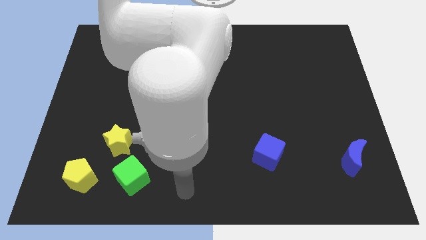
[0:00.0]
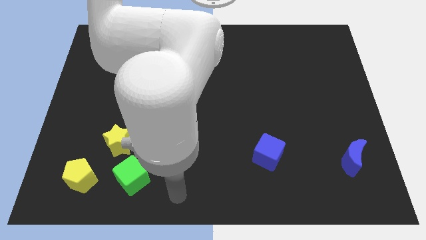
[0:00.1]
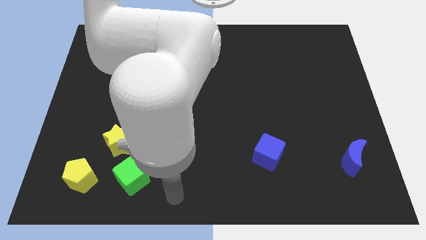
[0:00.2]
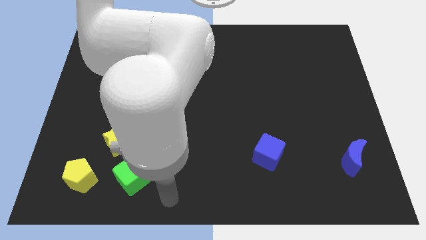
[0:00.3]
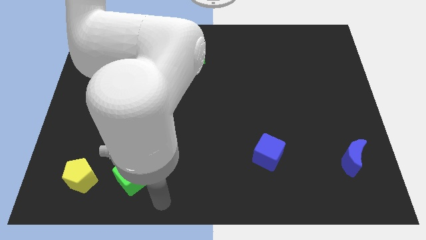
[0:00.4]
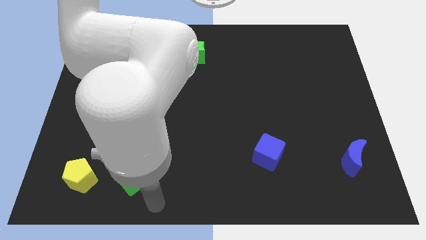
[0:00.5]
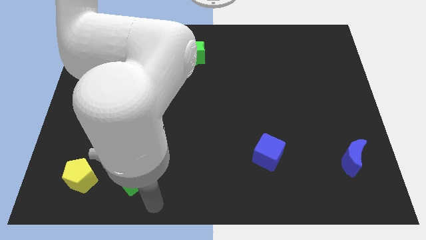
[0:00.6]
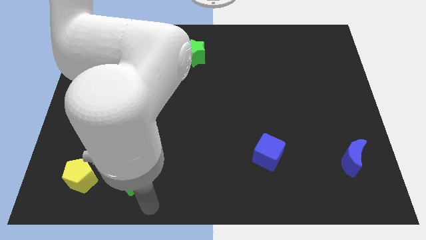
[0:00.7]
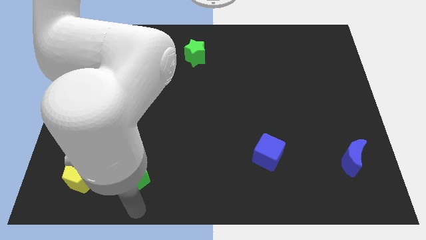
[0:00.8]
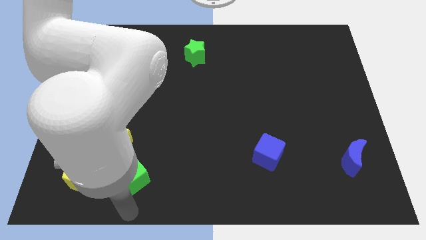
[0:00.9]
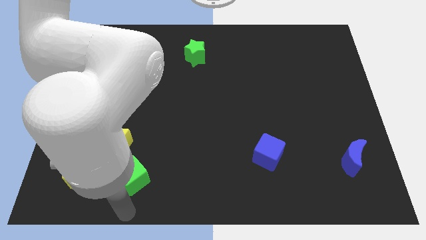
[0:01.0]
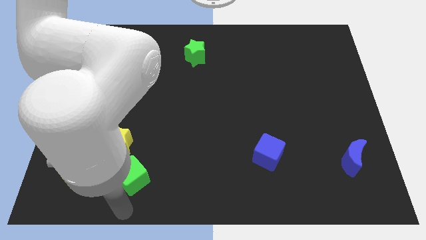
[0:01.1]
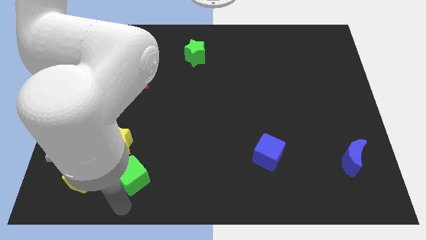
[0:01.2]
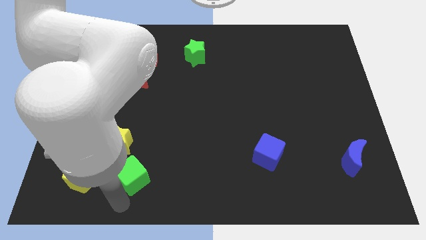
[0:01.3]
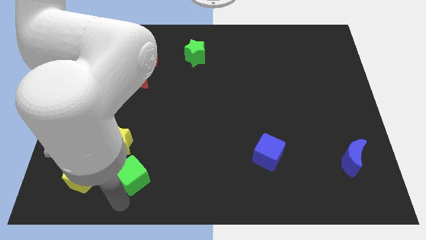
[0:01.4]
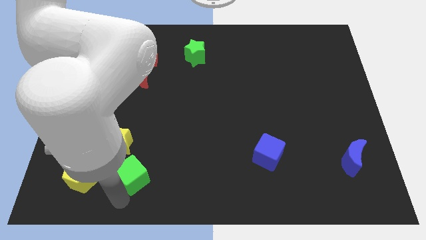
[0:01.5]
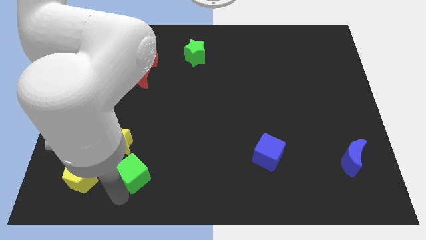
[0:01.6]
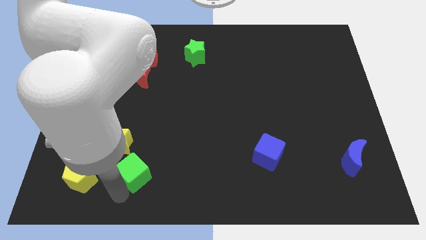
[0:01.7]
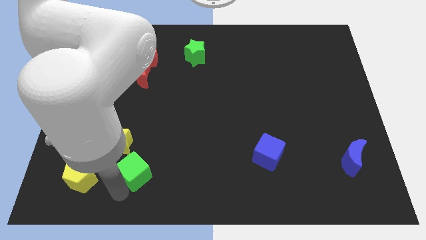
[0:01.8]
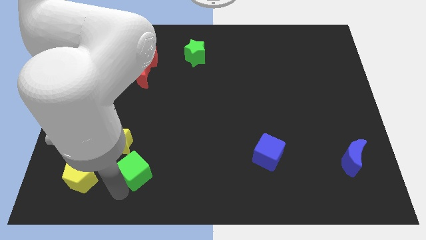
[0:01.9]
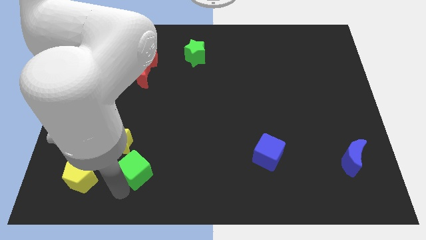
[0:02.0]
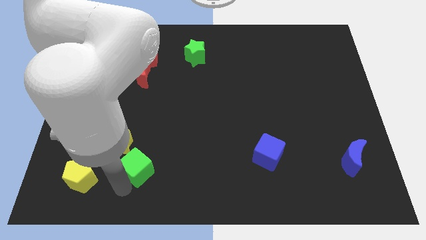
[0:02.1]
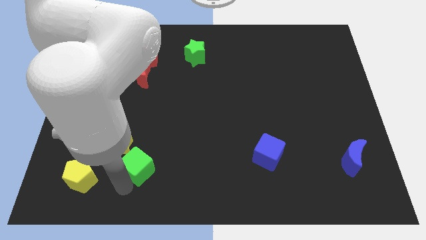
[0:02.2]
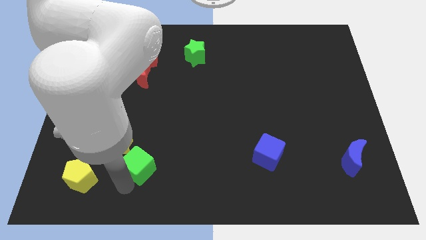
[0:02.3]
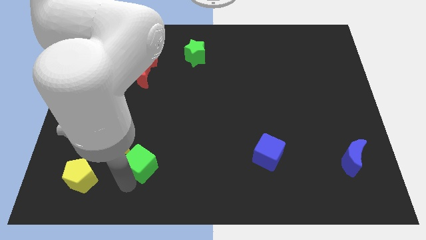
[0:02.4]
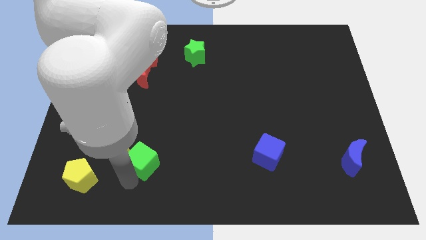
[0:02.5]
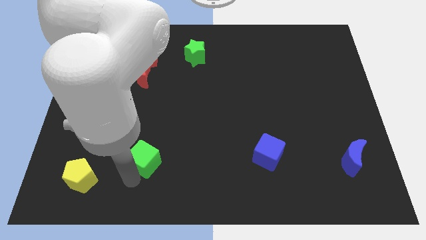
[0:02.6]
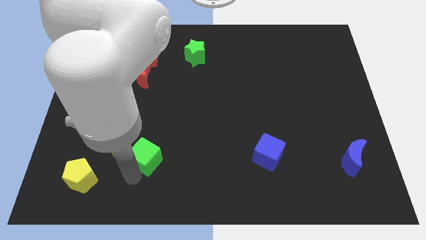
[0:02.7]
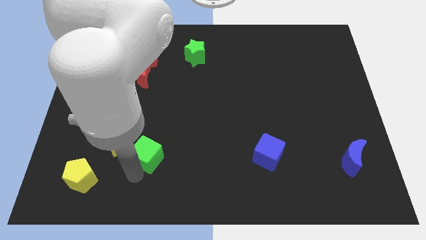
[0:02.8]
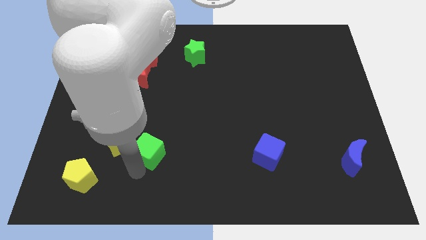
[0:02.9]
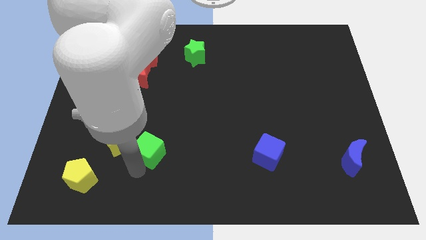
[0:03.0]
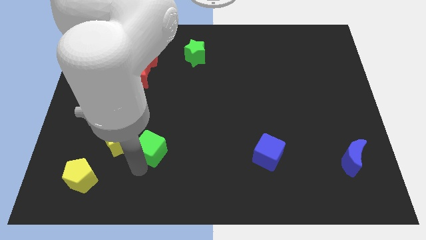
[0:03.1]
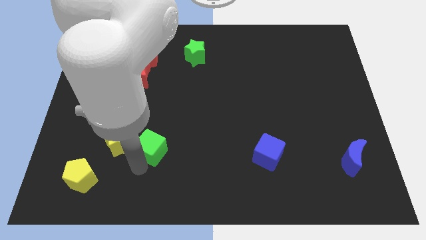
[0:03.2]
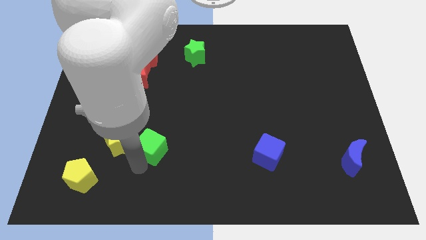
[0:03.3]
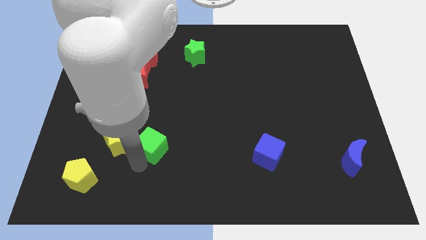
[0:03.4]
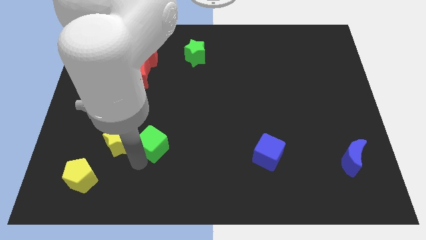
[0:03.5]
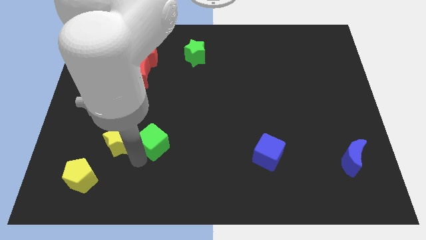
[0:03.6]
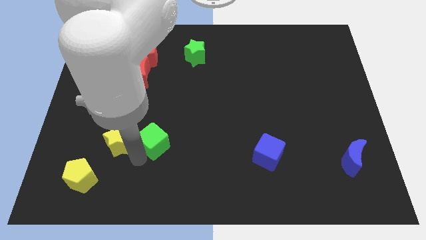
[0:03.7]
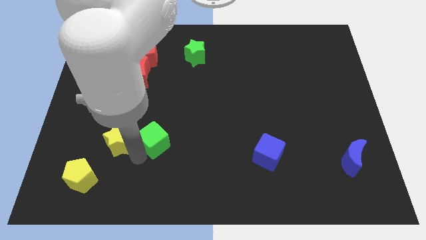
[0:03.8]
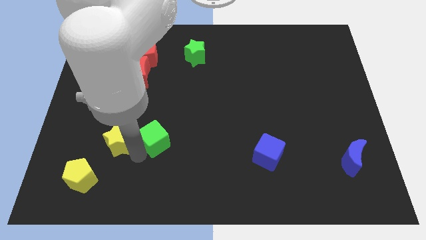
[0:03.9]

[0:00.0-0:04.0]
push the green cube to the right of yellow star

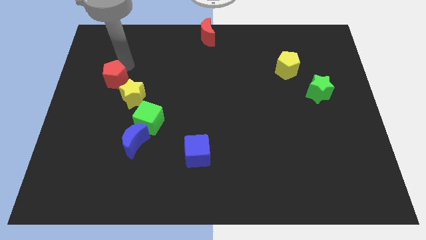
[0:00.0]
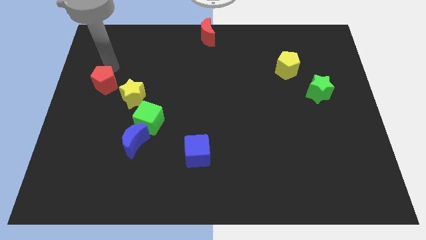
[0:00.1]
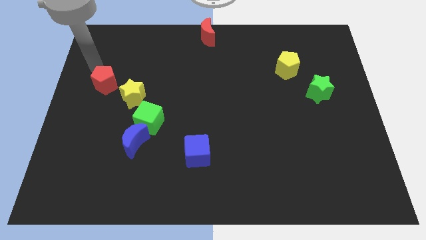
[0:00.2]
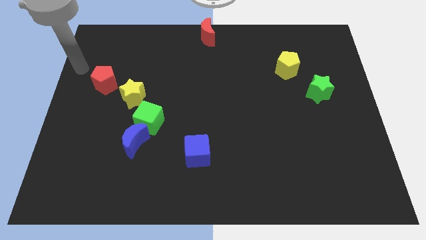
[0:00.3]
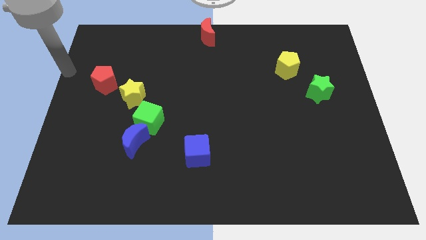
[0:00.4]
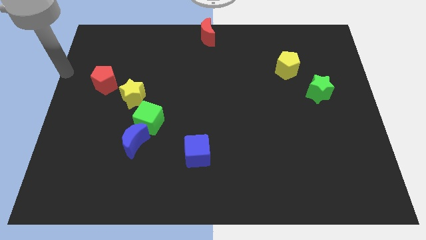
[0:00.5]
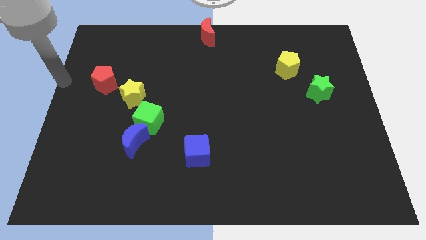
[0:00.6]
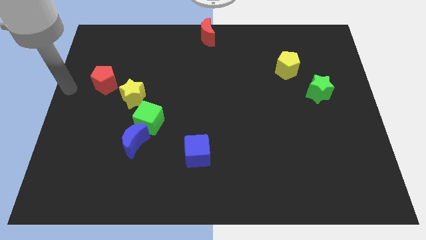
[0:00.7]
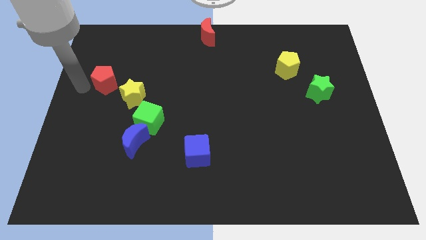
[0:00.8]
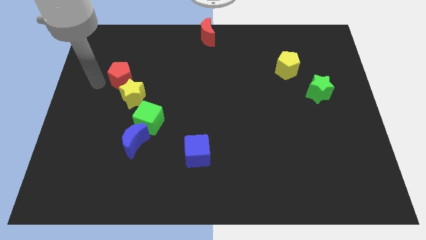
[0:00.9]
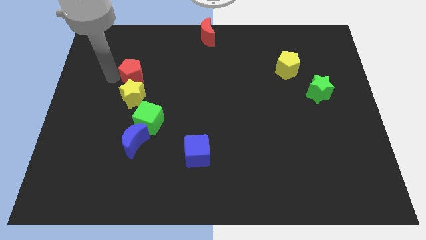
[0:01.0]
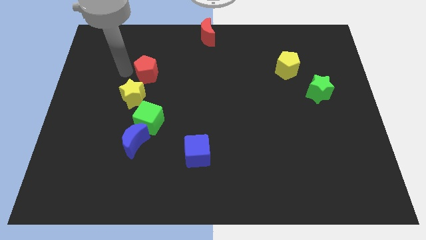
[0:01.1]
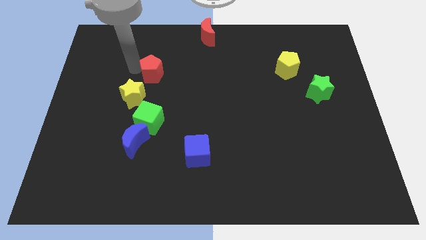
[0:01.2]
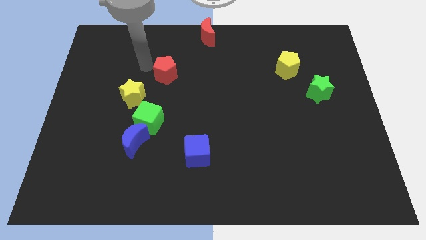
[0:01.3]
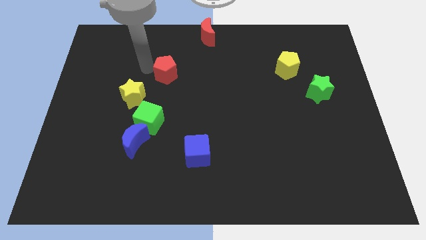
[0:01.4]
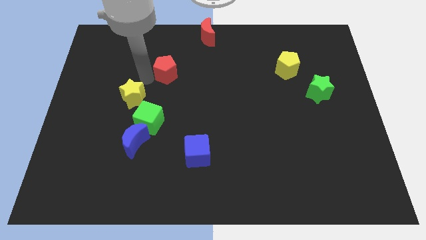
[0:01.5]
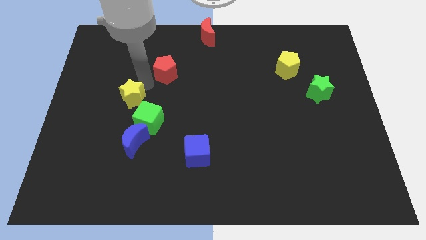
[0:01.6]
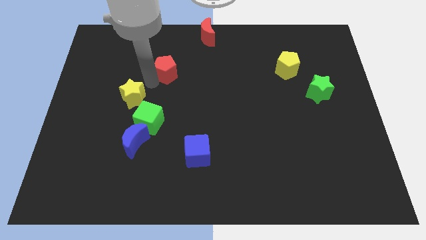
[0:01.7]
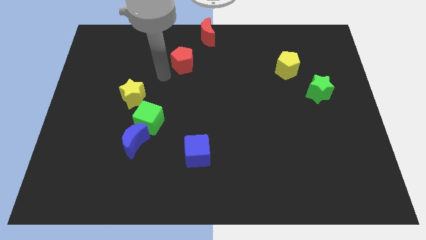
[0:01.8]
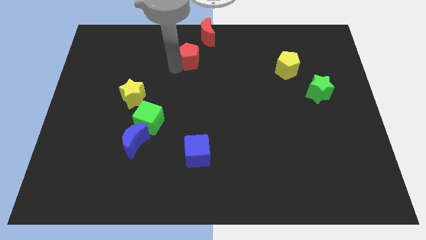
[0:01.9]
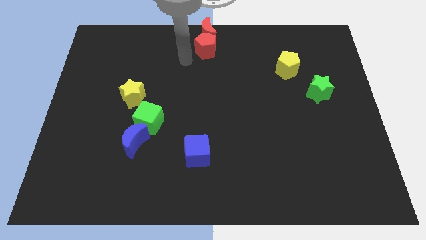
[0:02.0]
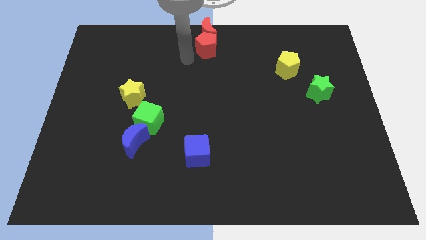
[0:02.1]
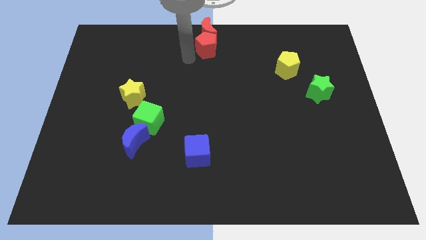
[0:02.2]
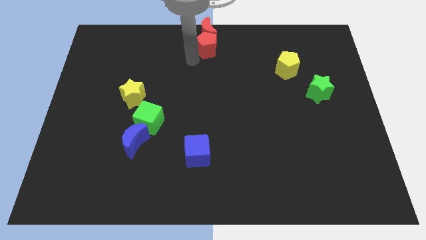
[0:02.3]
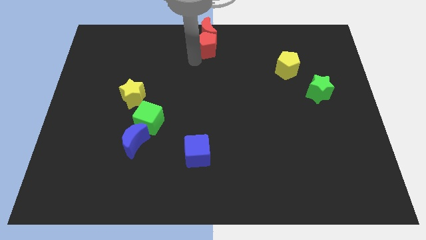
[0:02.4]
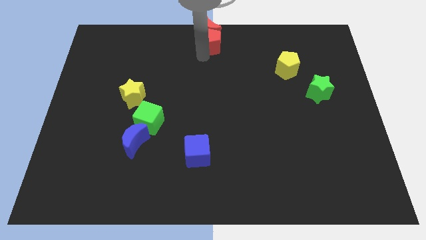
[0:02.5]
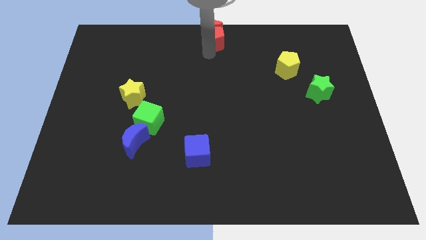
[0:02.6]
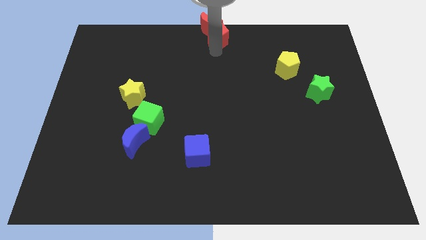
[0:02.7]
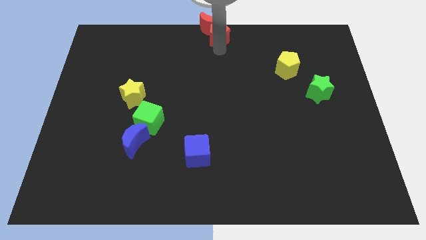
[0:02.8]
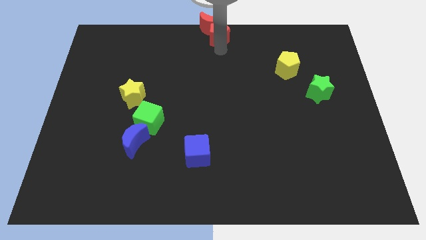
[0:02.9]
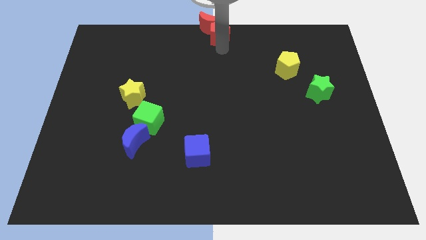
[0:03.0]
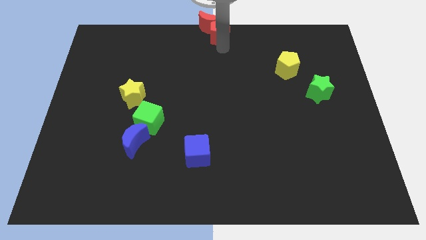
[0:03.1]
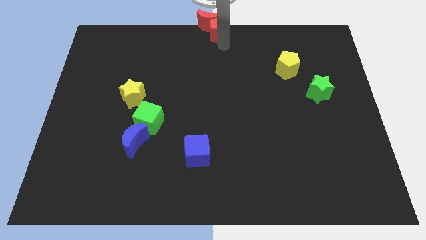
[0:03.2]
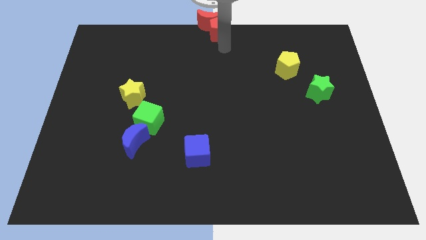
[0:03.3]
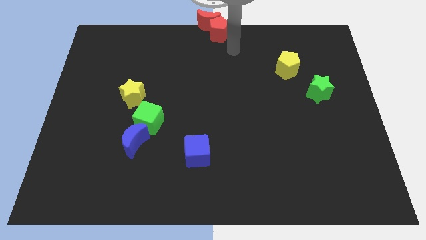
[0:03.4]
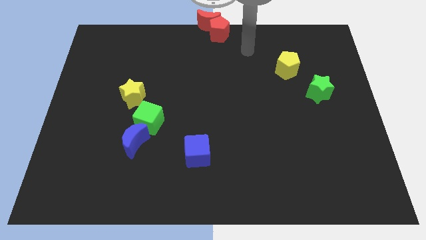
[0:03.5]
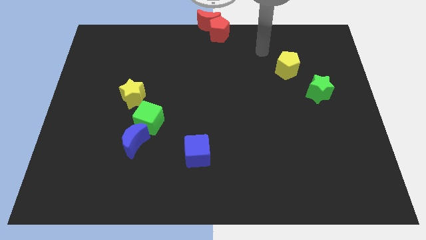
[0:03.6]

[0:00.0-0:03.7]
move the red pentagon to the bottom of the red crescent

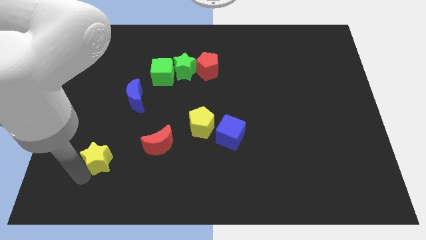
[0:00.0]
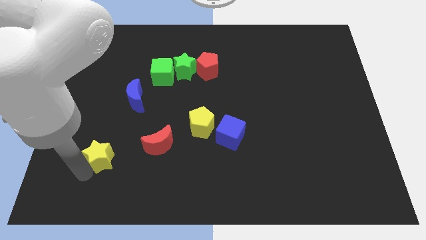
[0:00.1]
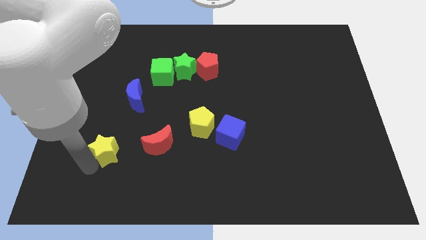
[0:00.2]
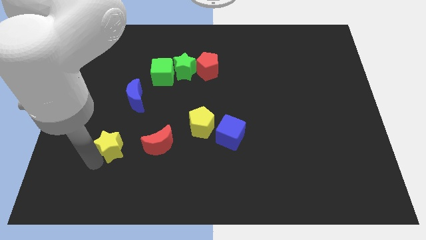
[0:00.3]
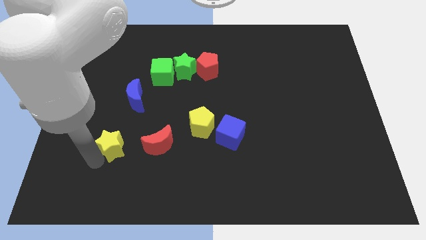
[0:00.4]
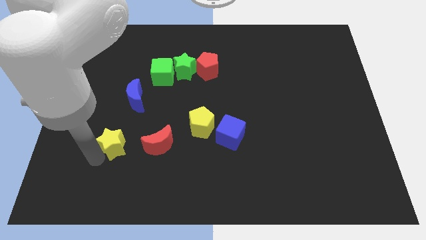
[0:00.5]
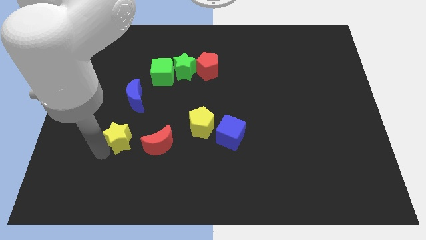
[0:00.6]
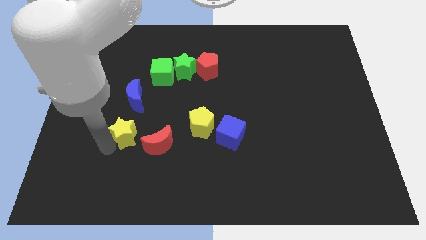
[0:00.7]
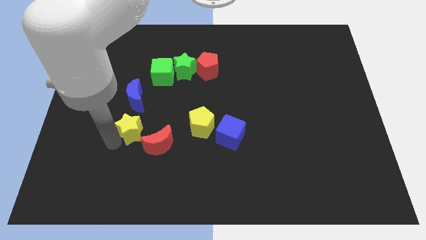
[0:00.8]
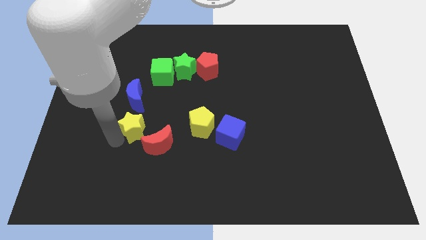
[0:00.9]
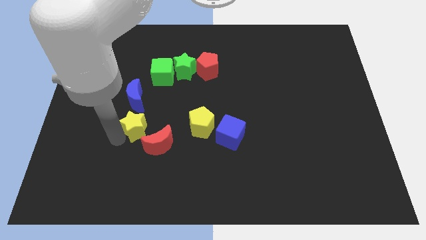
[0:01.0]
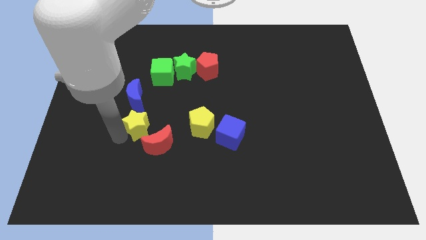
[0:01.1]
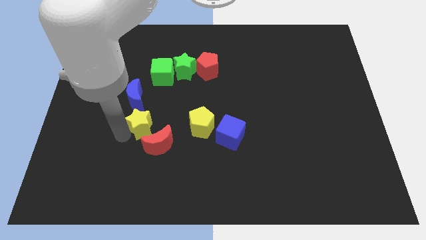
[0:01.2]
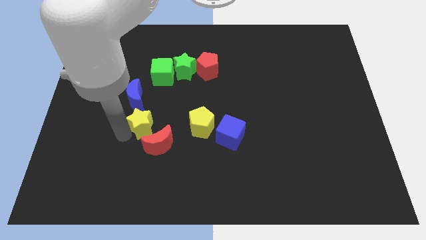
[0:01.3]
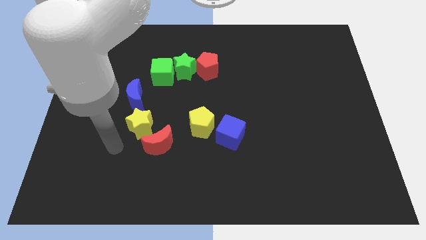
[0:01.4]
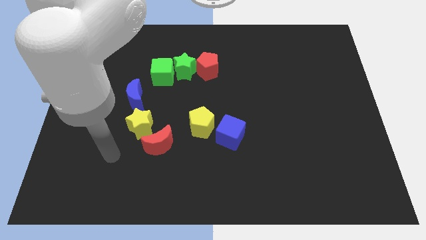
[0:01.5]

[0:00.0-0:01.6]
put the yellow star diagonally in between the blue and red crescents
